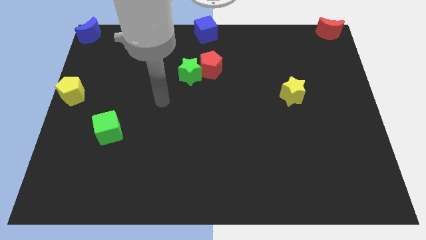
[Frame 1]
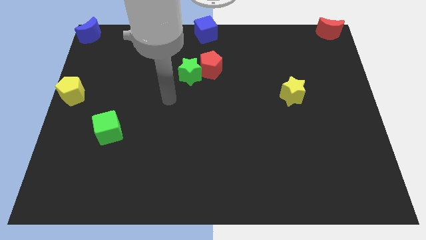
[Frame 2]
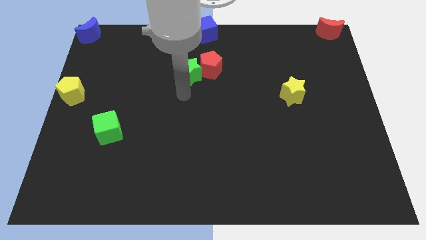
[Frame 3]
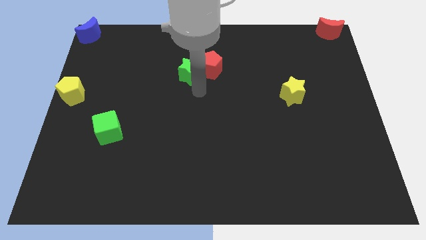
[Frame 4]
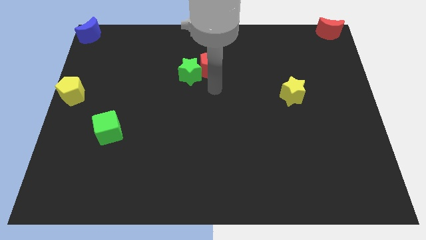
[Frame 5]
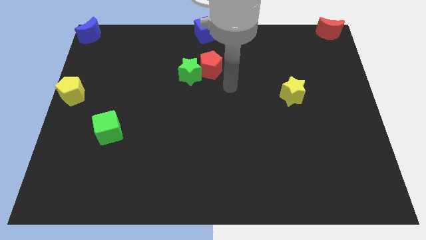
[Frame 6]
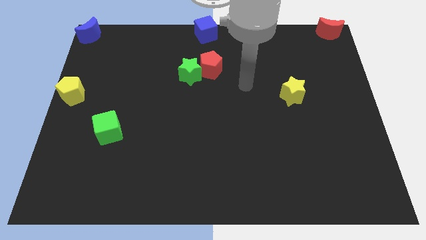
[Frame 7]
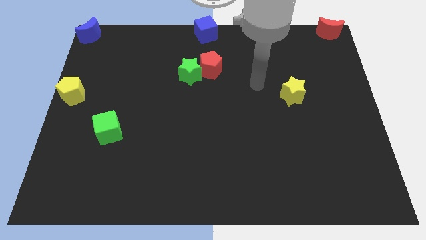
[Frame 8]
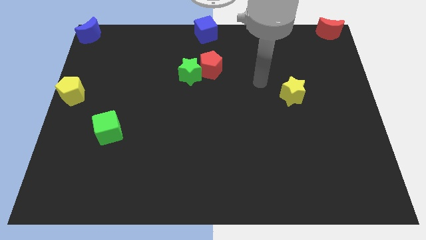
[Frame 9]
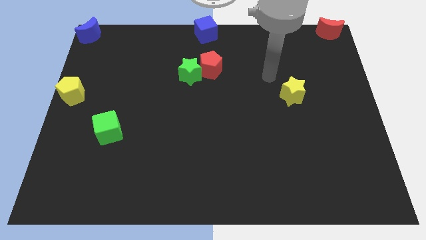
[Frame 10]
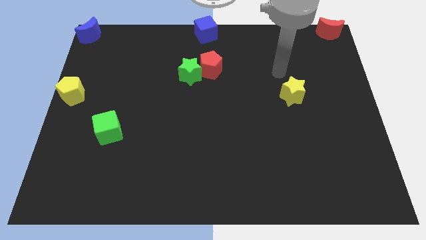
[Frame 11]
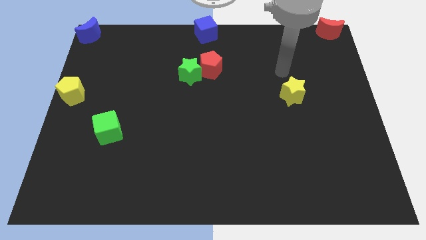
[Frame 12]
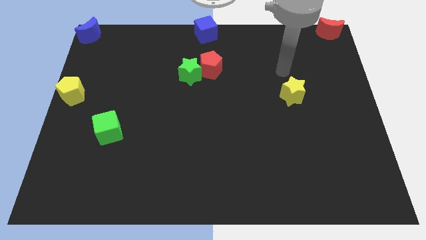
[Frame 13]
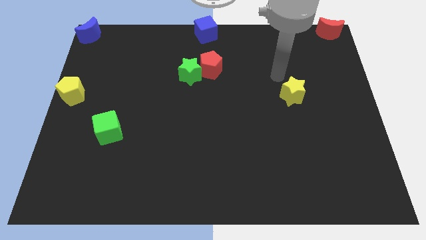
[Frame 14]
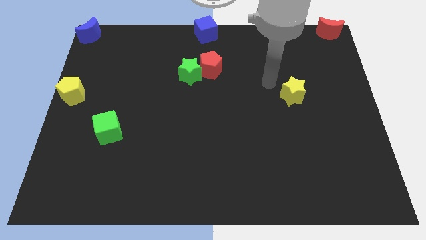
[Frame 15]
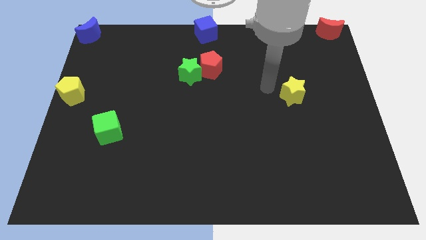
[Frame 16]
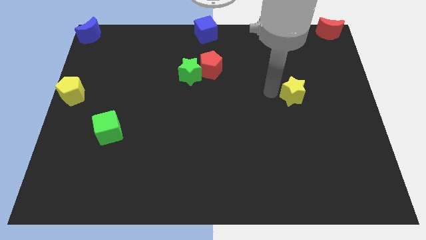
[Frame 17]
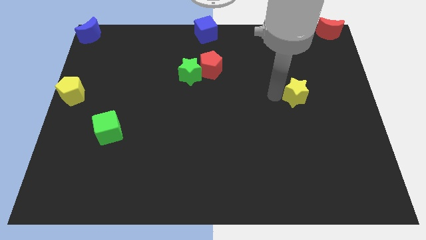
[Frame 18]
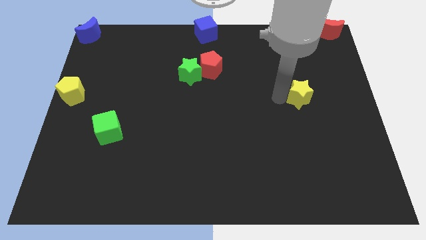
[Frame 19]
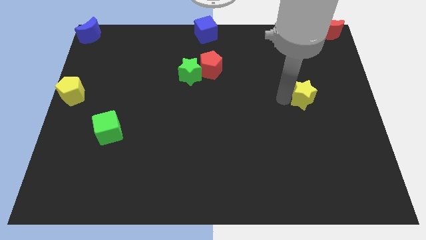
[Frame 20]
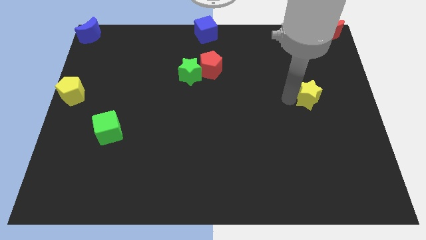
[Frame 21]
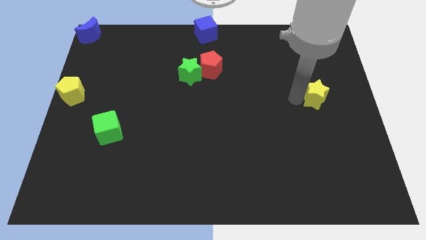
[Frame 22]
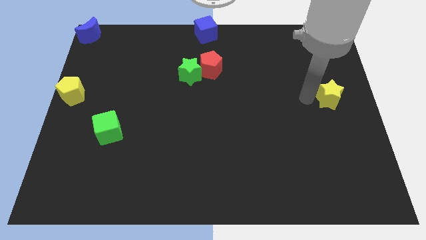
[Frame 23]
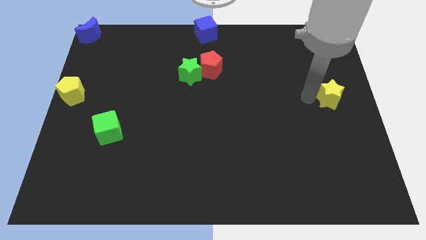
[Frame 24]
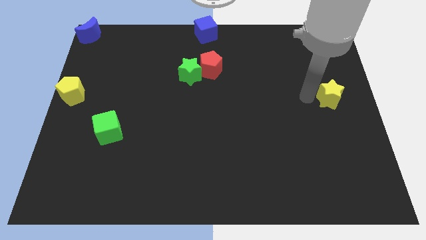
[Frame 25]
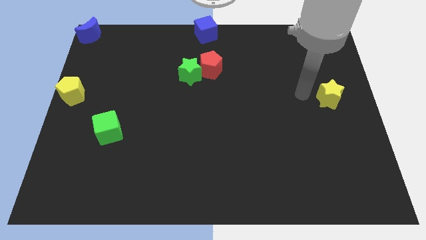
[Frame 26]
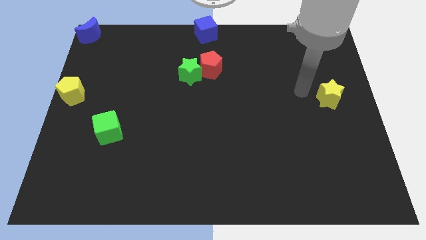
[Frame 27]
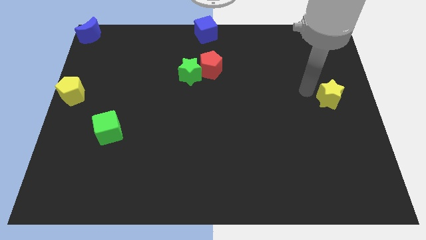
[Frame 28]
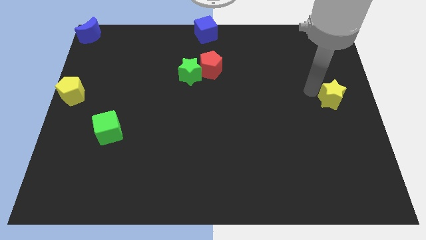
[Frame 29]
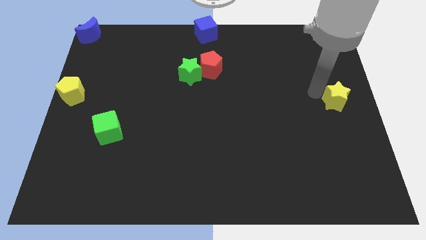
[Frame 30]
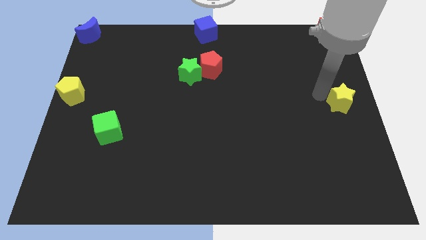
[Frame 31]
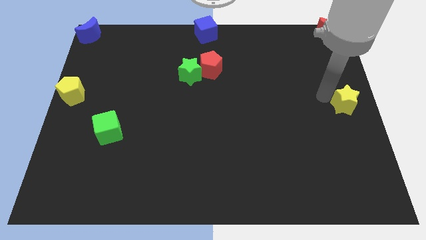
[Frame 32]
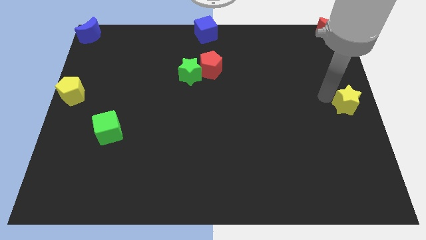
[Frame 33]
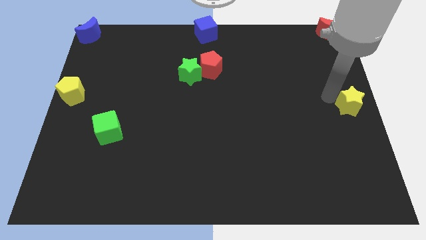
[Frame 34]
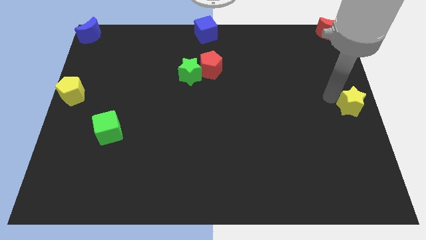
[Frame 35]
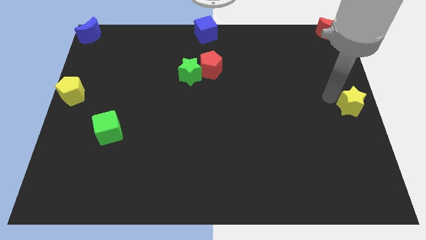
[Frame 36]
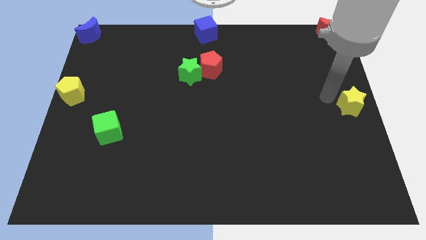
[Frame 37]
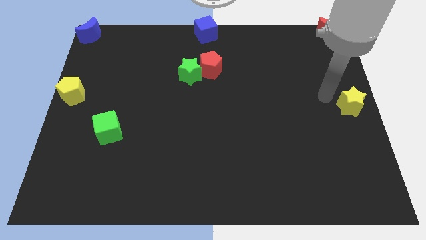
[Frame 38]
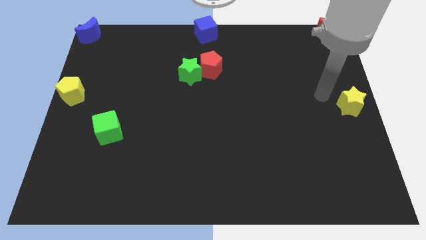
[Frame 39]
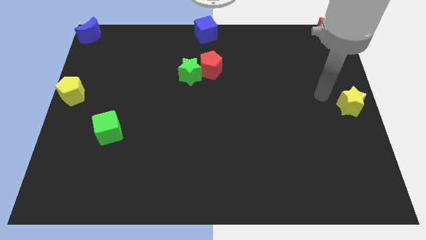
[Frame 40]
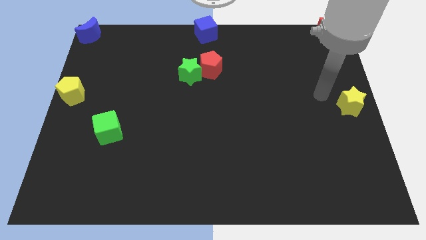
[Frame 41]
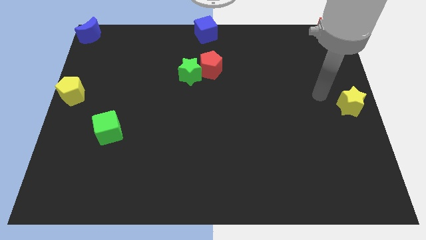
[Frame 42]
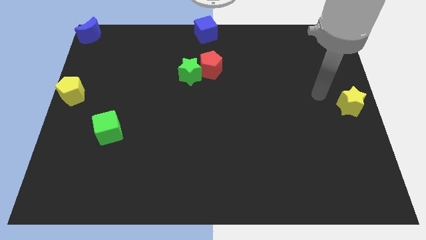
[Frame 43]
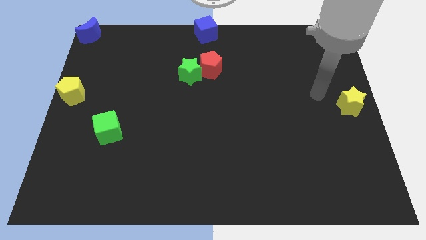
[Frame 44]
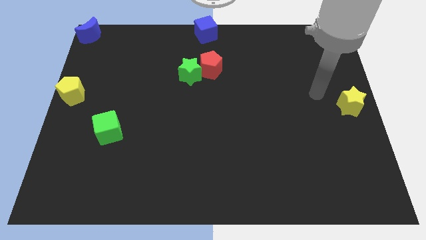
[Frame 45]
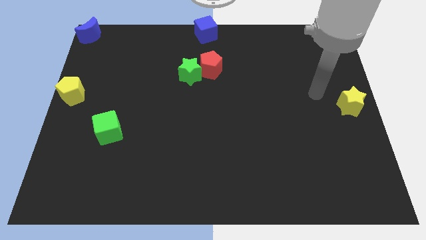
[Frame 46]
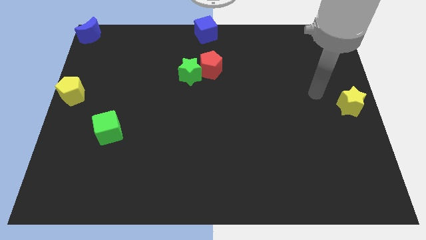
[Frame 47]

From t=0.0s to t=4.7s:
push the yellow star to the center right of the board

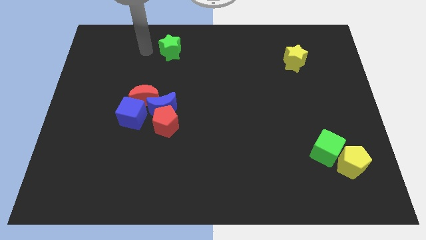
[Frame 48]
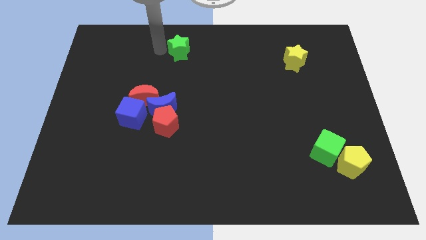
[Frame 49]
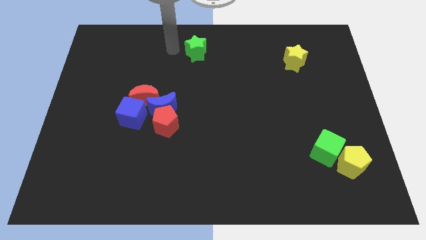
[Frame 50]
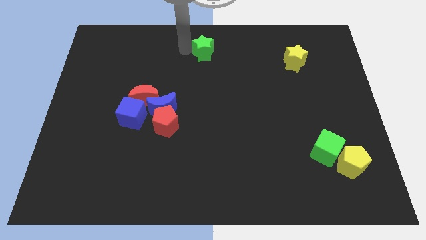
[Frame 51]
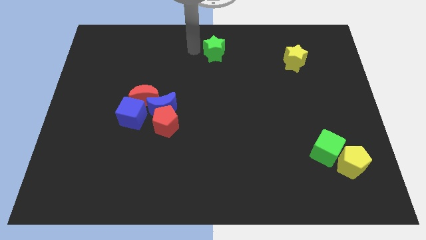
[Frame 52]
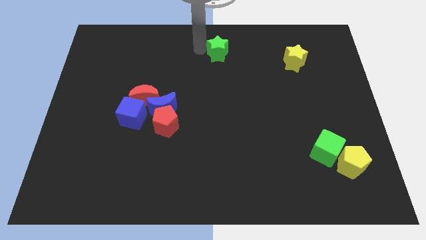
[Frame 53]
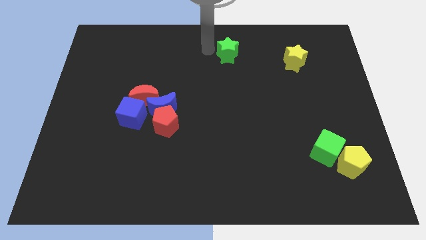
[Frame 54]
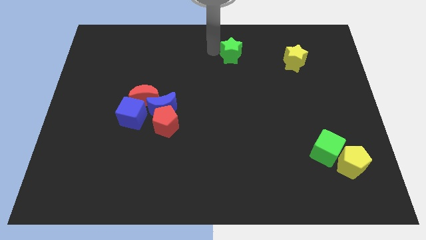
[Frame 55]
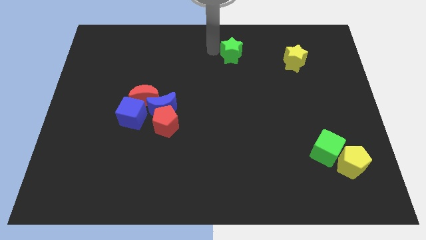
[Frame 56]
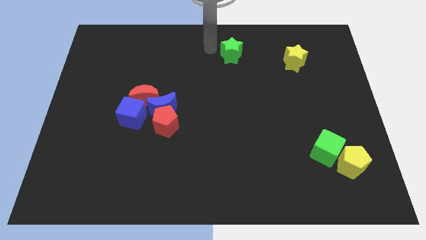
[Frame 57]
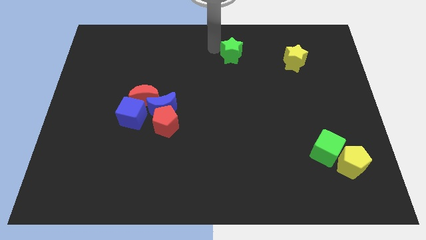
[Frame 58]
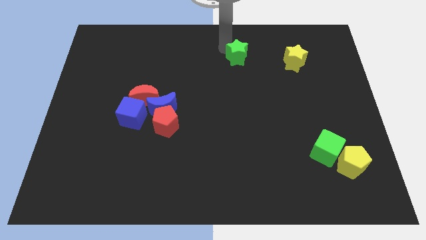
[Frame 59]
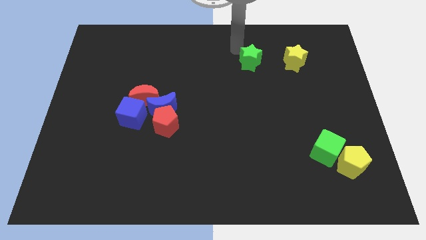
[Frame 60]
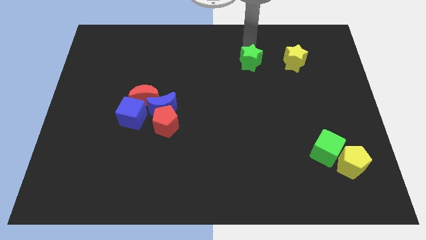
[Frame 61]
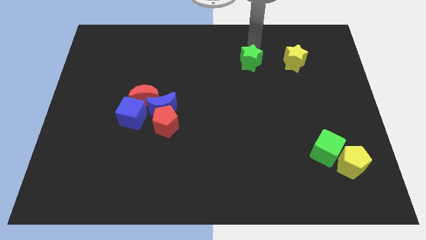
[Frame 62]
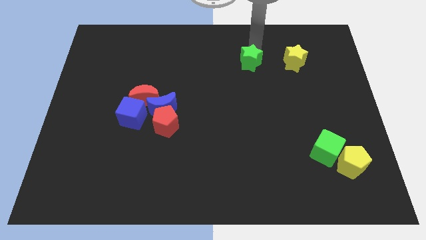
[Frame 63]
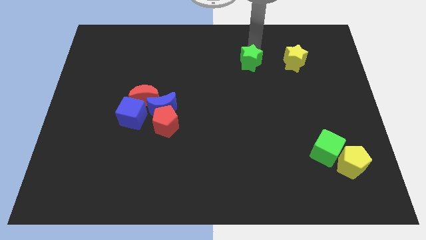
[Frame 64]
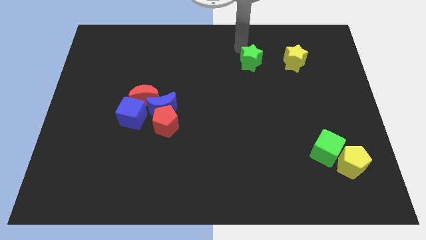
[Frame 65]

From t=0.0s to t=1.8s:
place green star to the left of yellow star

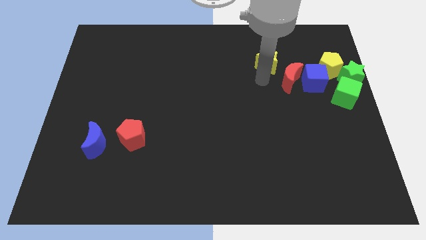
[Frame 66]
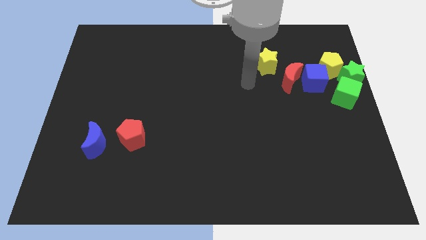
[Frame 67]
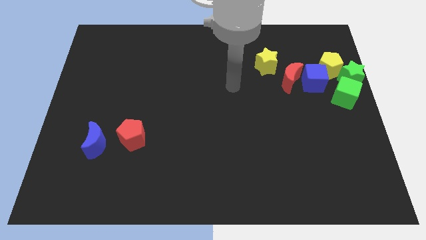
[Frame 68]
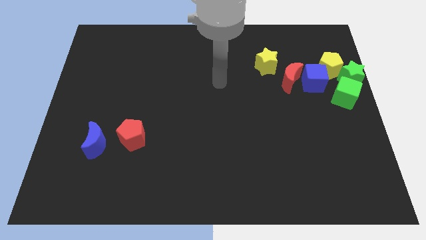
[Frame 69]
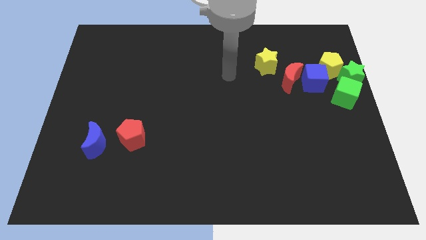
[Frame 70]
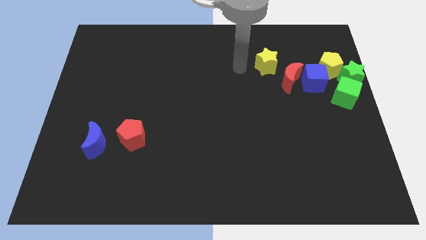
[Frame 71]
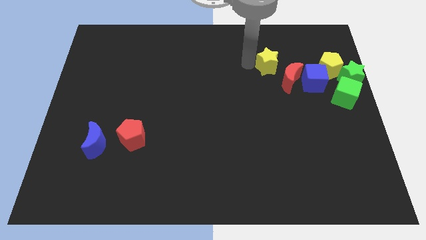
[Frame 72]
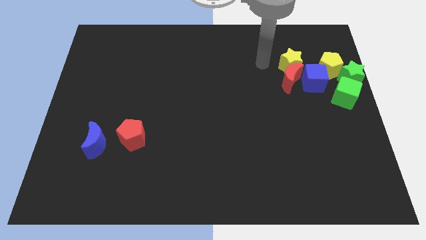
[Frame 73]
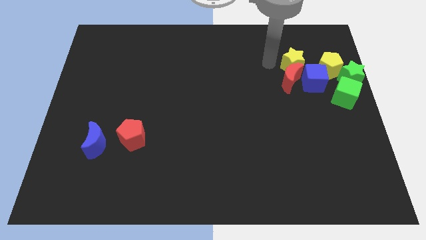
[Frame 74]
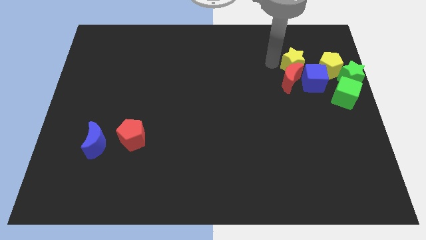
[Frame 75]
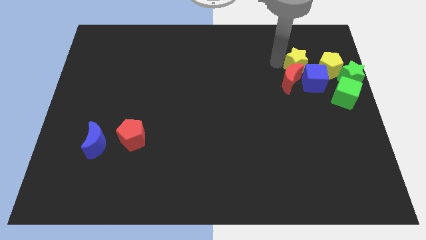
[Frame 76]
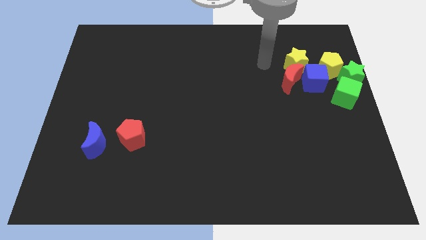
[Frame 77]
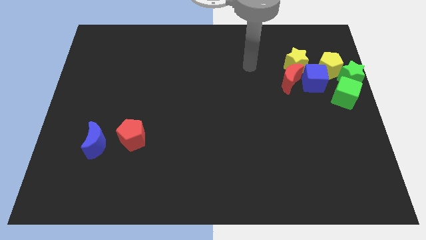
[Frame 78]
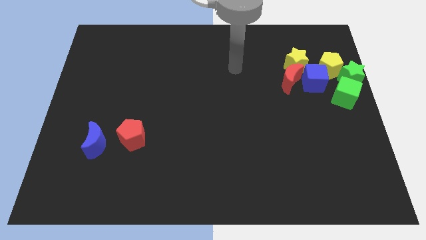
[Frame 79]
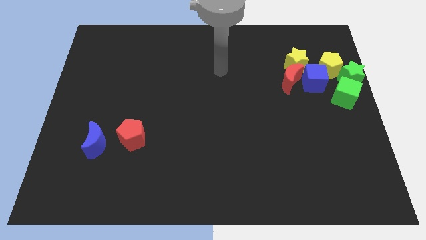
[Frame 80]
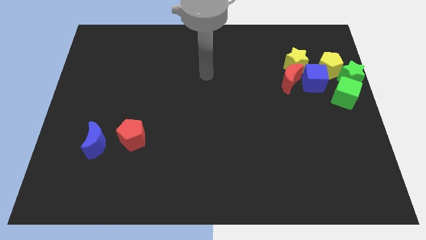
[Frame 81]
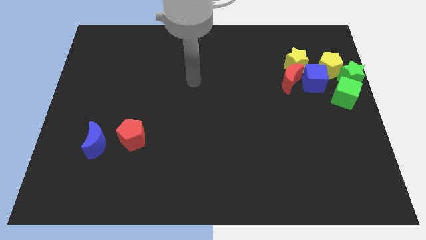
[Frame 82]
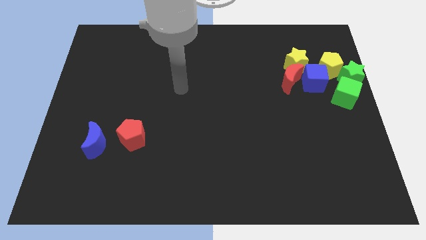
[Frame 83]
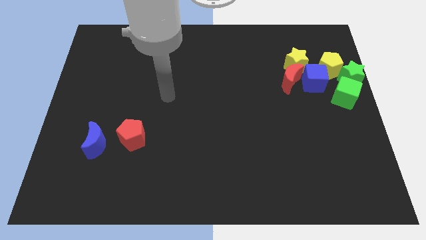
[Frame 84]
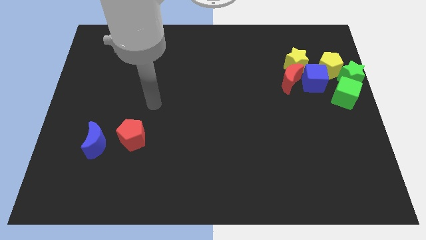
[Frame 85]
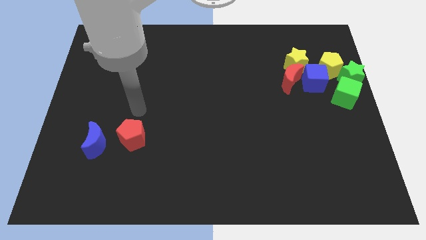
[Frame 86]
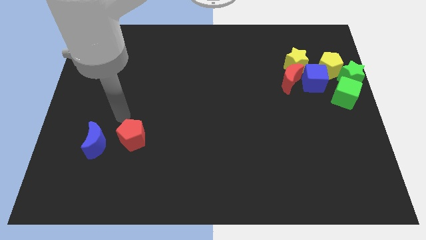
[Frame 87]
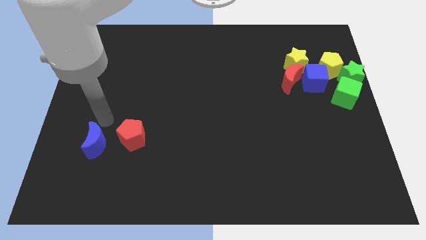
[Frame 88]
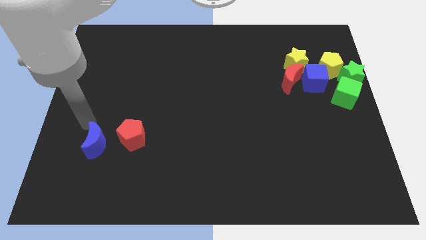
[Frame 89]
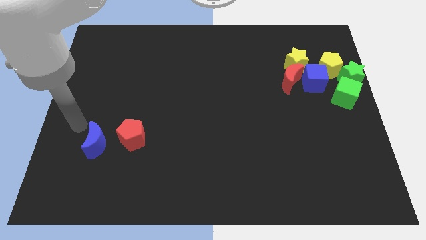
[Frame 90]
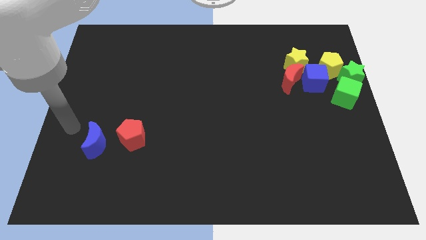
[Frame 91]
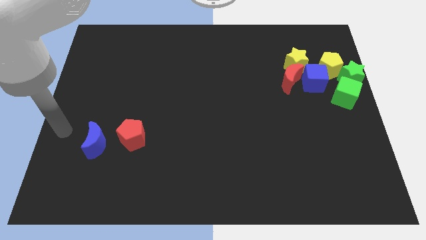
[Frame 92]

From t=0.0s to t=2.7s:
move the arm towards the left of the blue moon
